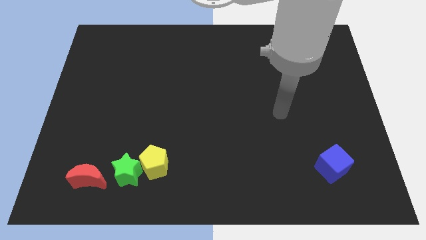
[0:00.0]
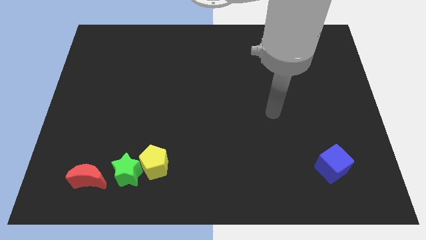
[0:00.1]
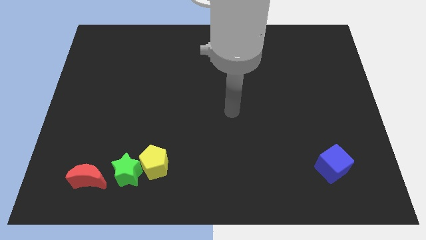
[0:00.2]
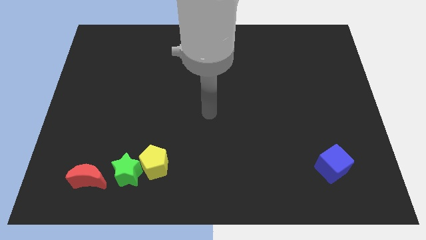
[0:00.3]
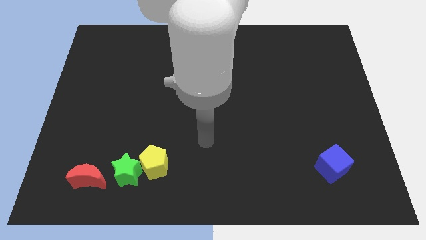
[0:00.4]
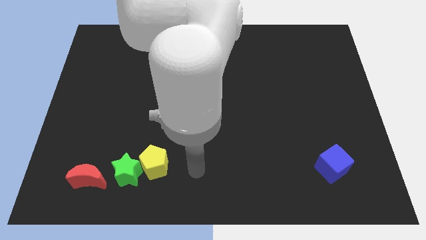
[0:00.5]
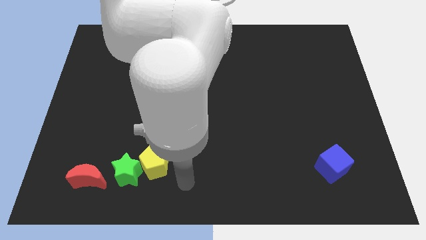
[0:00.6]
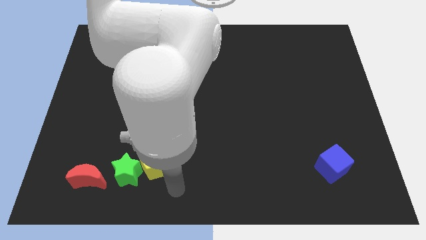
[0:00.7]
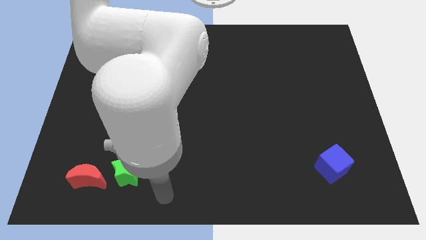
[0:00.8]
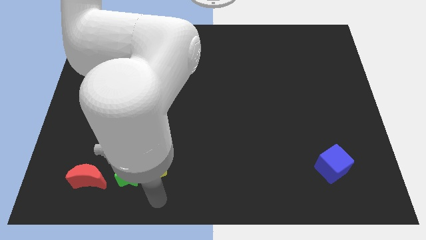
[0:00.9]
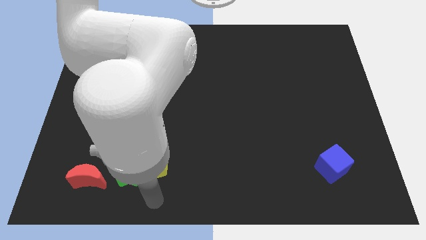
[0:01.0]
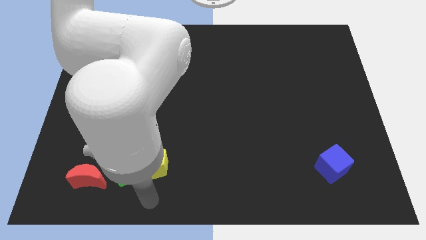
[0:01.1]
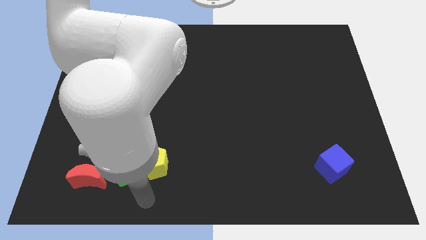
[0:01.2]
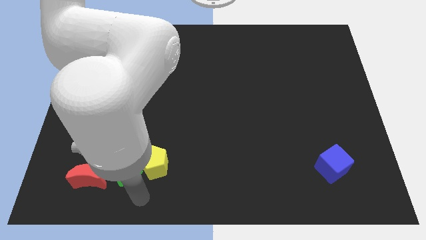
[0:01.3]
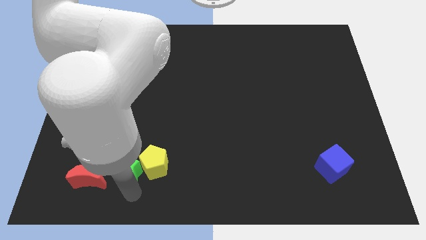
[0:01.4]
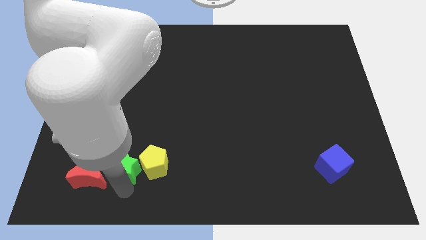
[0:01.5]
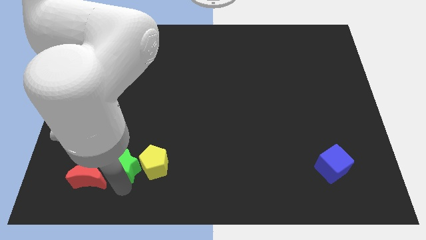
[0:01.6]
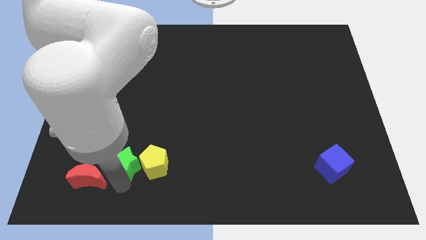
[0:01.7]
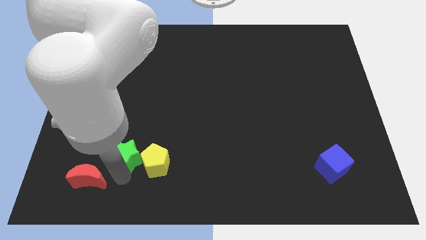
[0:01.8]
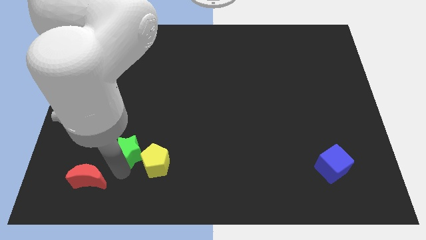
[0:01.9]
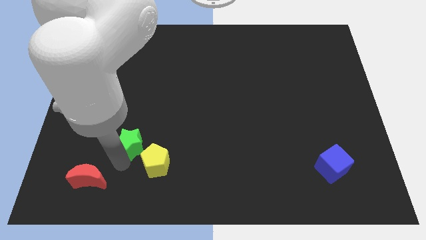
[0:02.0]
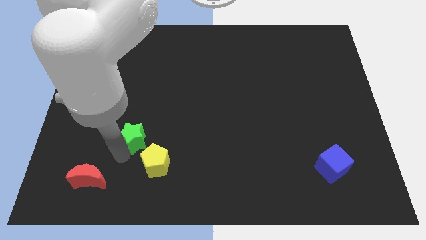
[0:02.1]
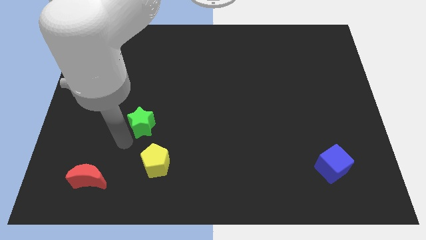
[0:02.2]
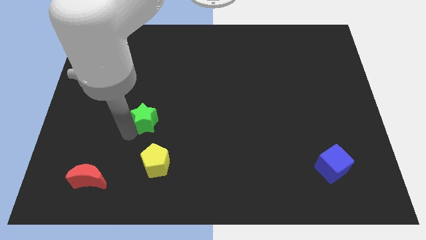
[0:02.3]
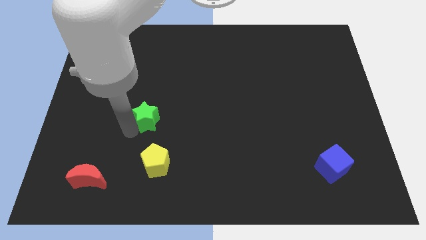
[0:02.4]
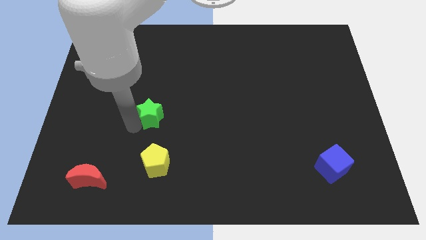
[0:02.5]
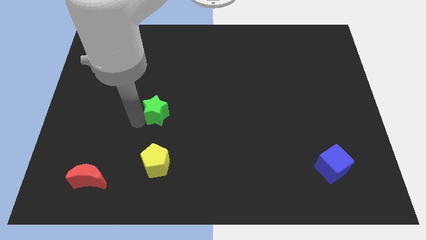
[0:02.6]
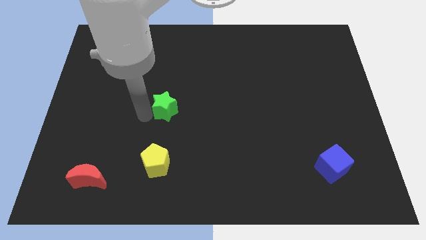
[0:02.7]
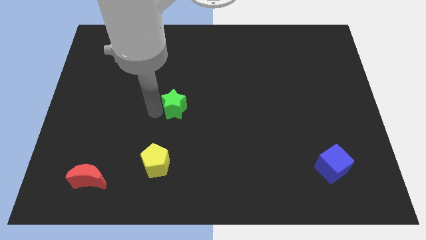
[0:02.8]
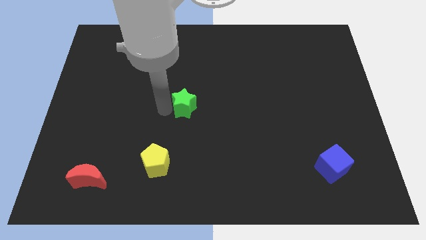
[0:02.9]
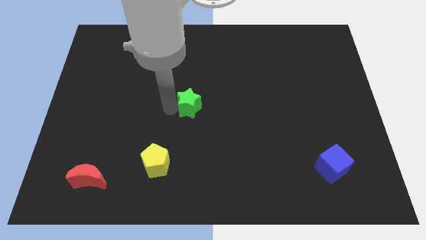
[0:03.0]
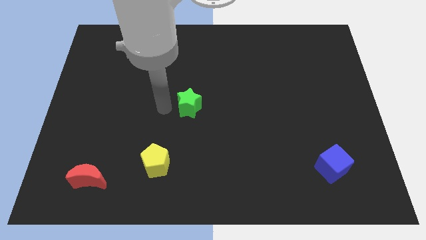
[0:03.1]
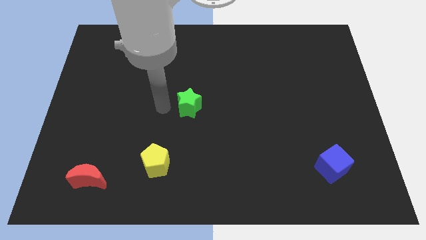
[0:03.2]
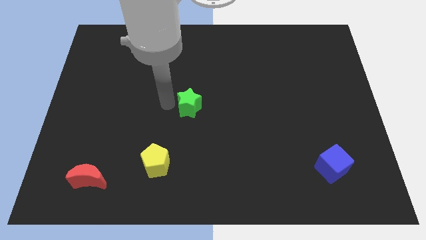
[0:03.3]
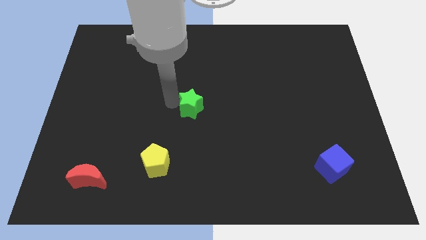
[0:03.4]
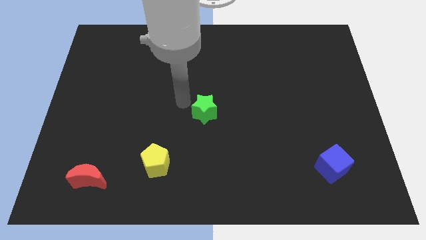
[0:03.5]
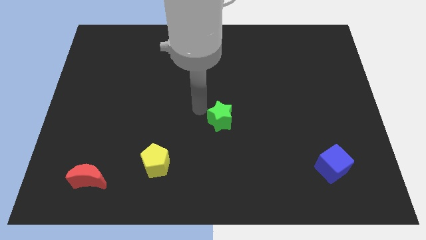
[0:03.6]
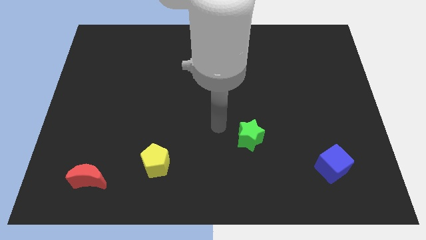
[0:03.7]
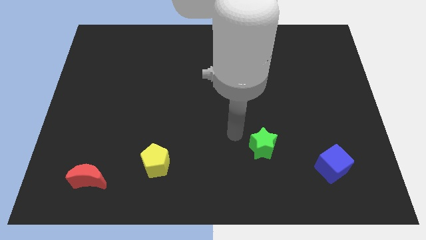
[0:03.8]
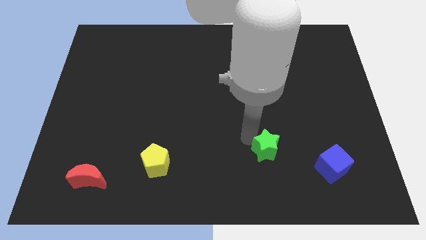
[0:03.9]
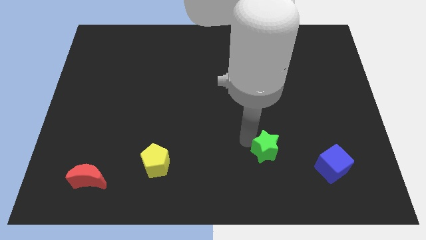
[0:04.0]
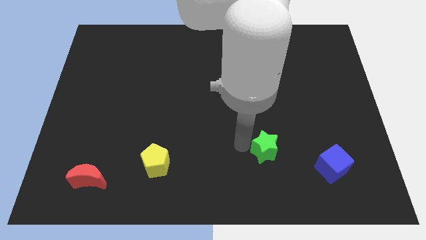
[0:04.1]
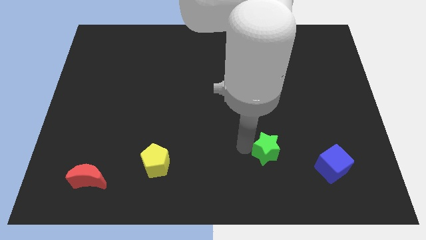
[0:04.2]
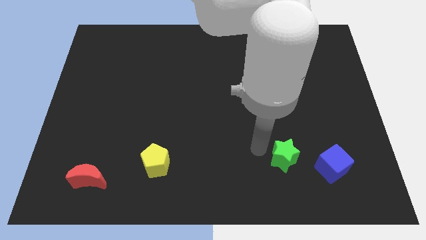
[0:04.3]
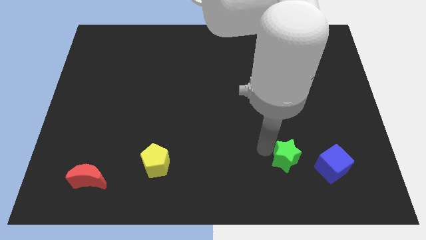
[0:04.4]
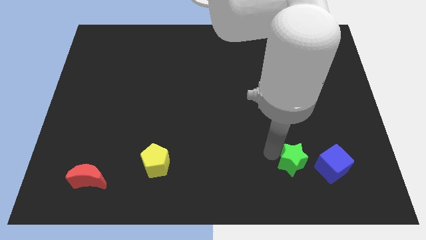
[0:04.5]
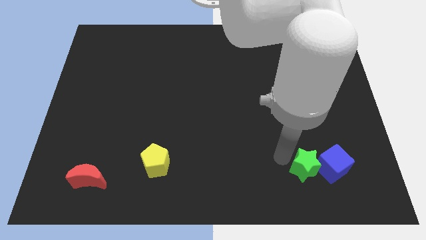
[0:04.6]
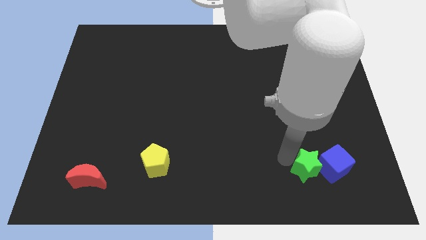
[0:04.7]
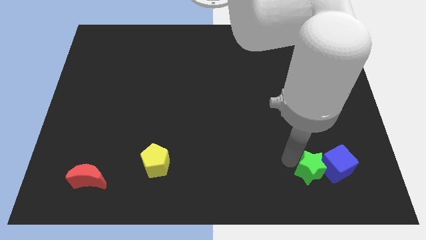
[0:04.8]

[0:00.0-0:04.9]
slide the star next to the blue block

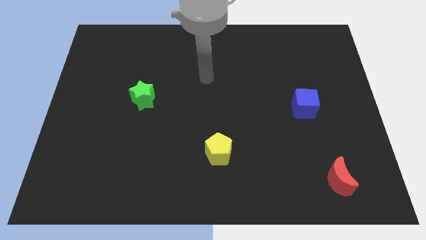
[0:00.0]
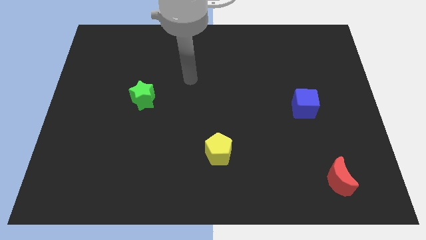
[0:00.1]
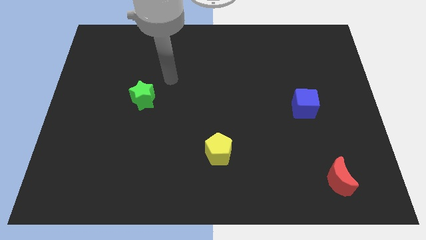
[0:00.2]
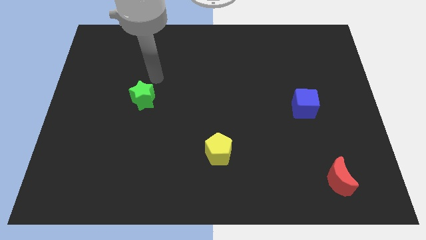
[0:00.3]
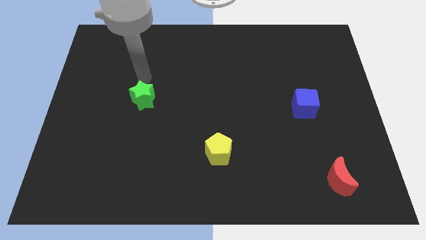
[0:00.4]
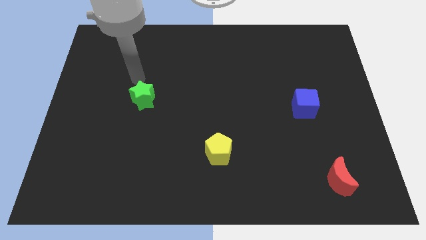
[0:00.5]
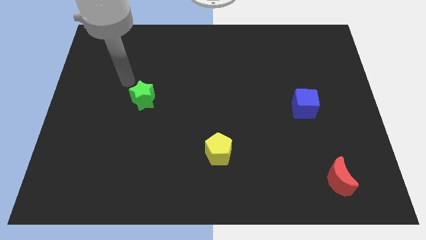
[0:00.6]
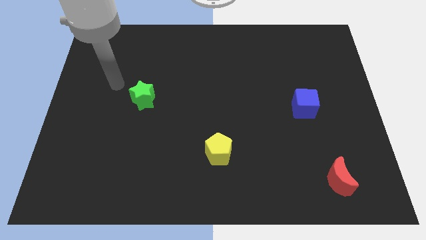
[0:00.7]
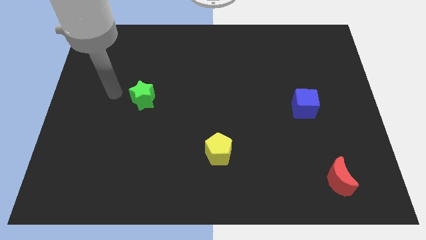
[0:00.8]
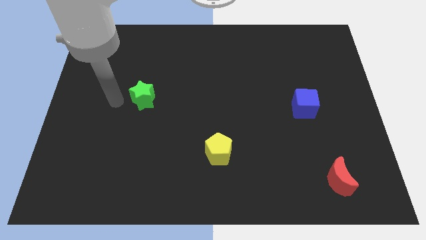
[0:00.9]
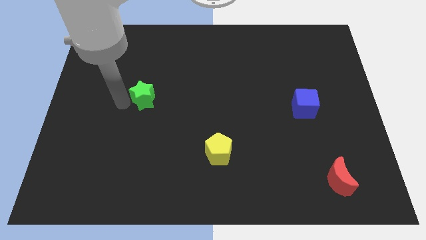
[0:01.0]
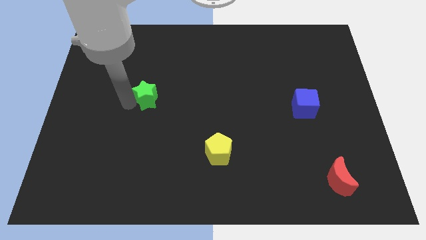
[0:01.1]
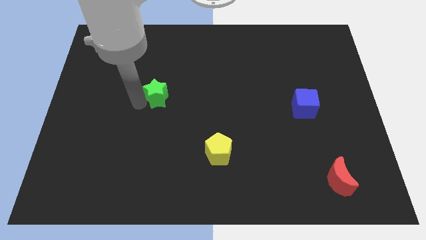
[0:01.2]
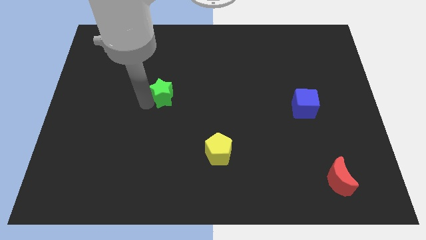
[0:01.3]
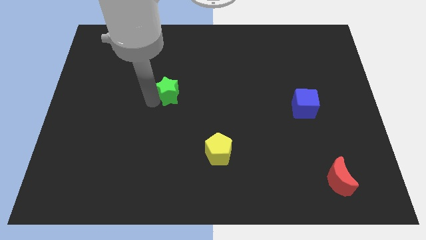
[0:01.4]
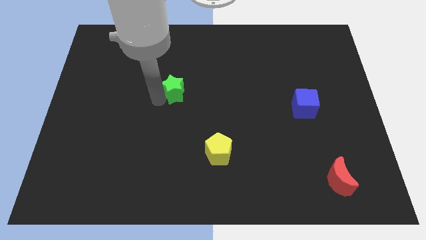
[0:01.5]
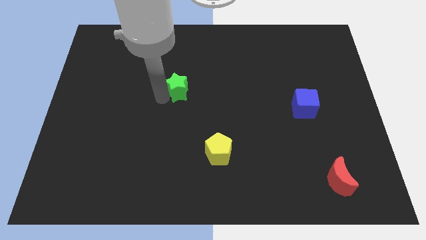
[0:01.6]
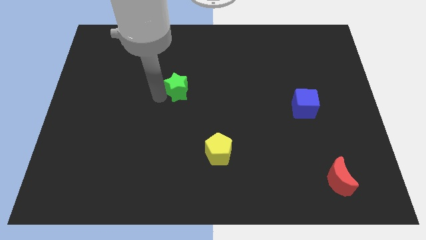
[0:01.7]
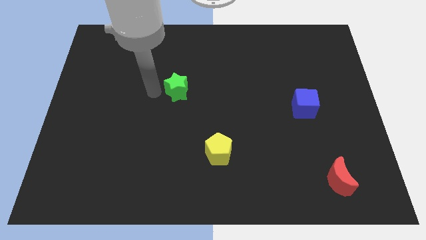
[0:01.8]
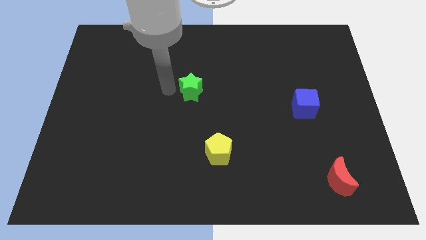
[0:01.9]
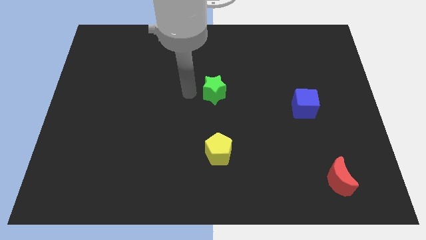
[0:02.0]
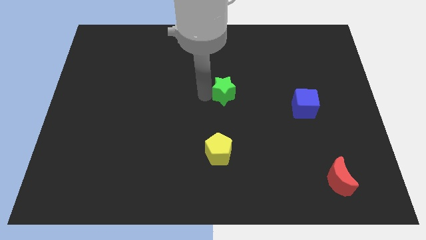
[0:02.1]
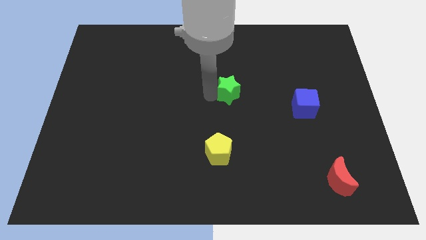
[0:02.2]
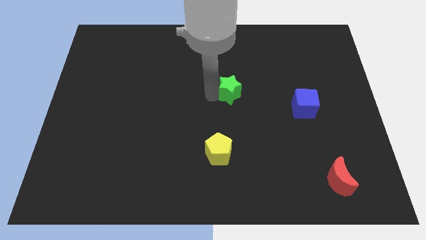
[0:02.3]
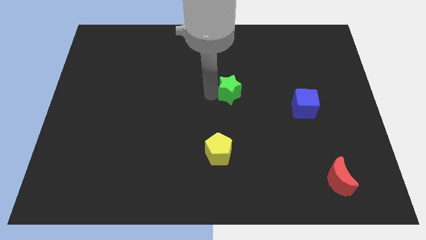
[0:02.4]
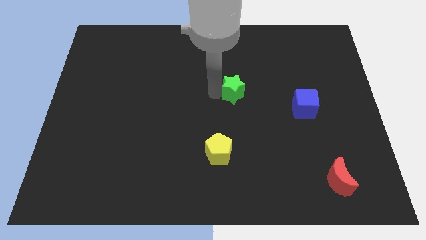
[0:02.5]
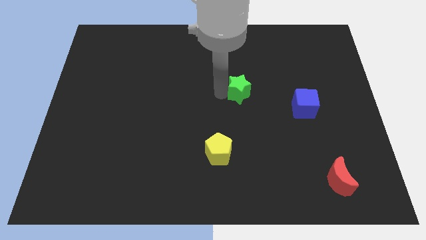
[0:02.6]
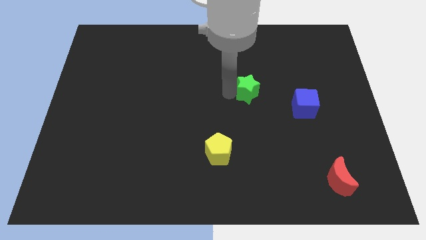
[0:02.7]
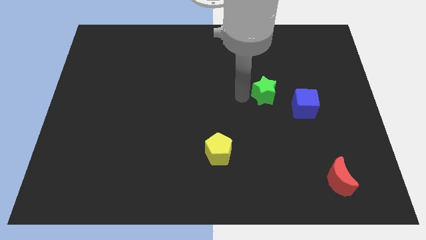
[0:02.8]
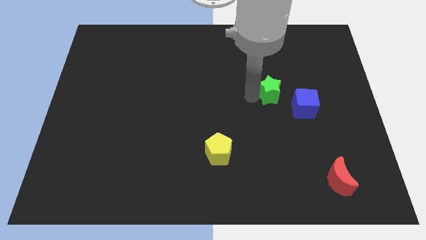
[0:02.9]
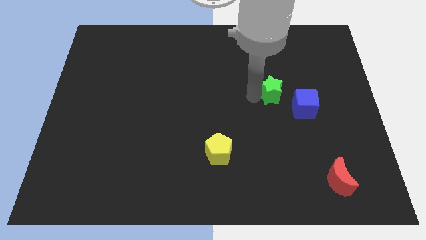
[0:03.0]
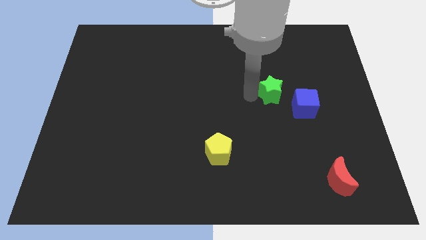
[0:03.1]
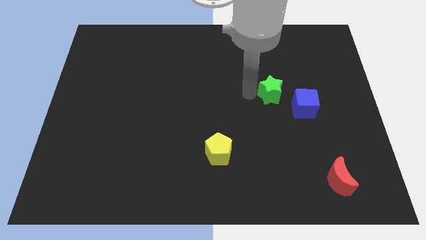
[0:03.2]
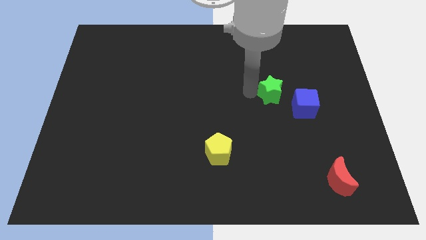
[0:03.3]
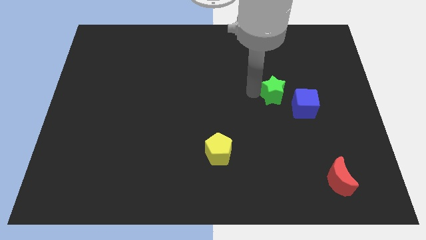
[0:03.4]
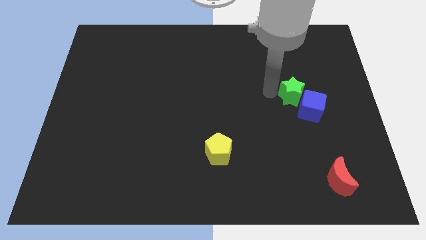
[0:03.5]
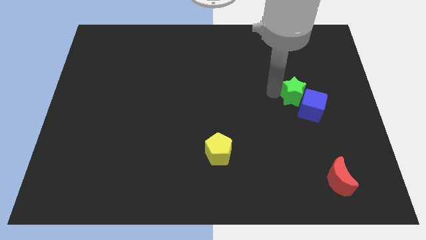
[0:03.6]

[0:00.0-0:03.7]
push the green star close to the blue cube
